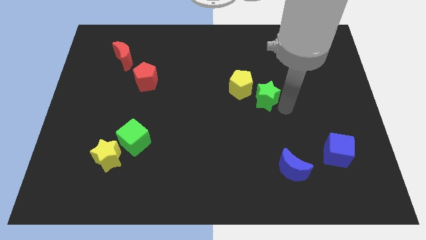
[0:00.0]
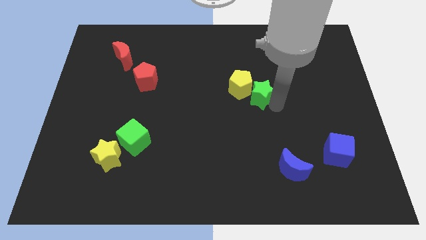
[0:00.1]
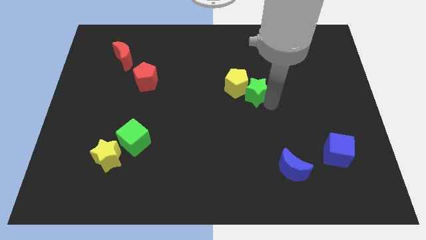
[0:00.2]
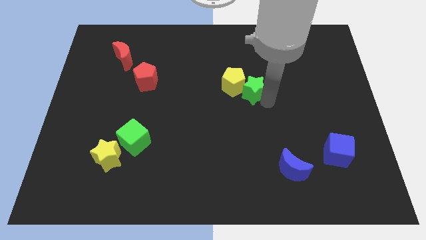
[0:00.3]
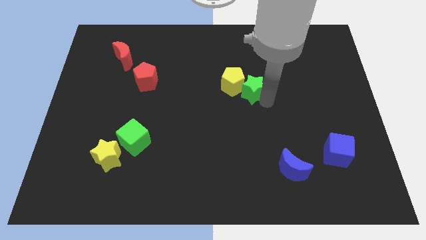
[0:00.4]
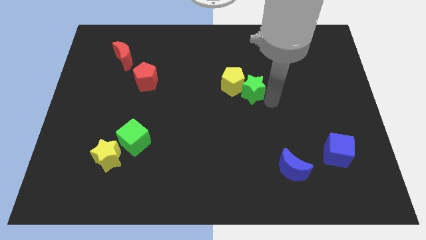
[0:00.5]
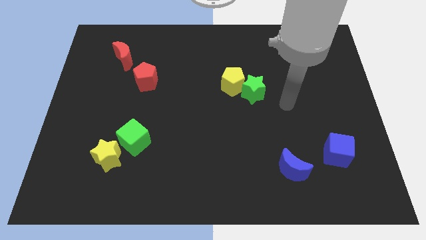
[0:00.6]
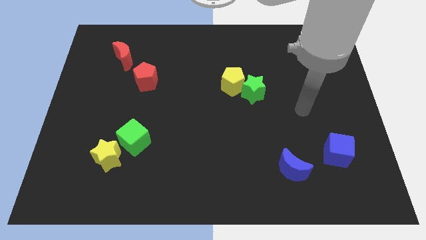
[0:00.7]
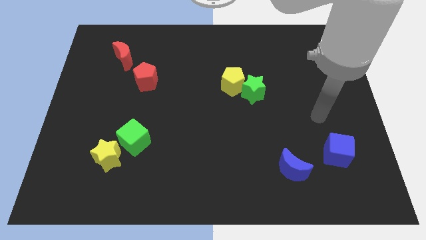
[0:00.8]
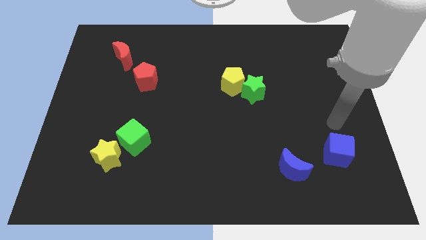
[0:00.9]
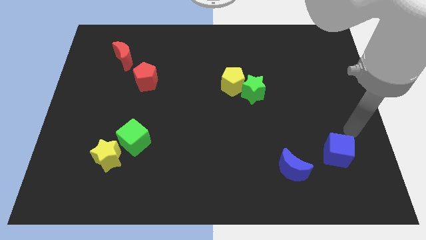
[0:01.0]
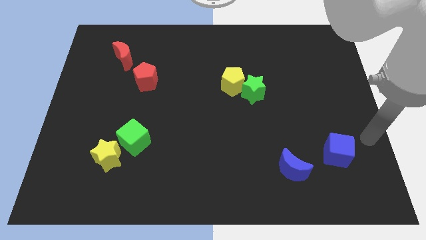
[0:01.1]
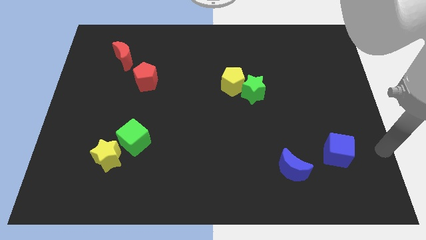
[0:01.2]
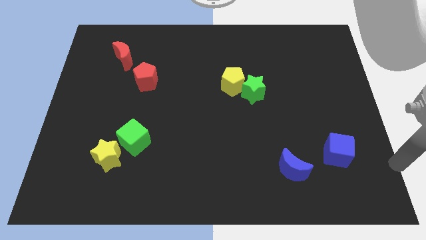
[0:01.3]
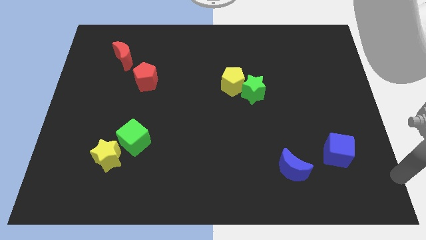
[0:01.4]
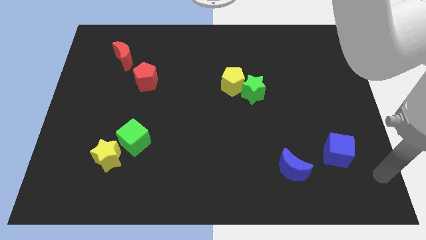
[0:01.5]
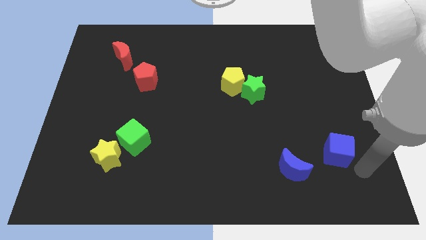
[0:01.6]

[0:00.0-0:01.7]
place your arm to the bottom right of blue cube

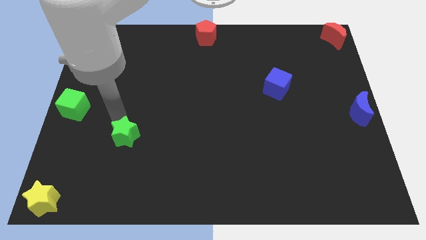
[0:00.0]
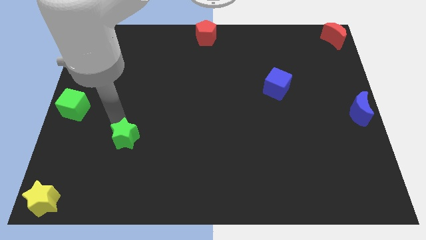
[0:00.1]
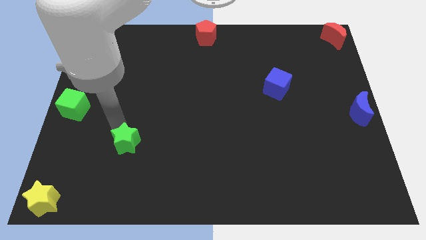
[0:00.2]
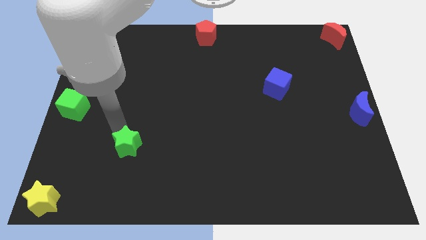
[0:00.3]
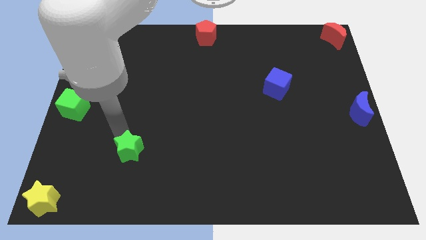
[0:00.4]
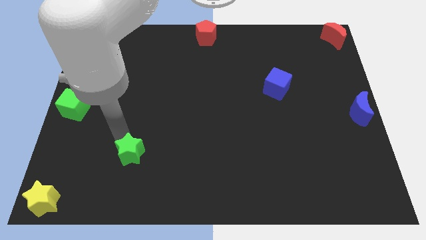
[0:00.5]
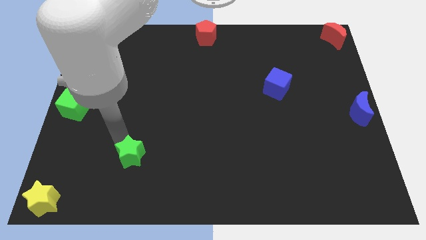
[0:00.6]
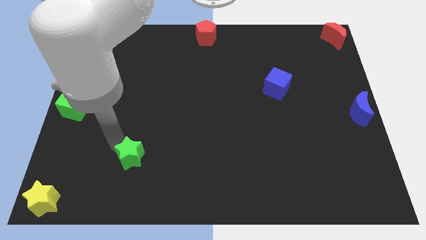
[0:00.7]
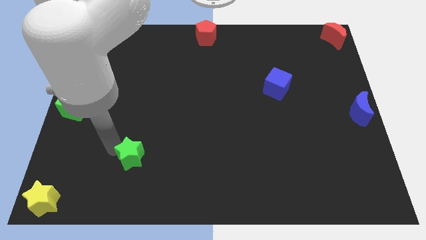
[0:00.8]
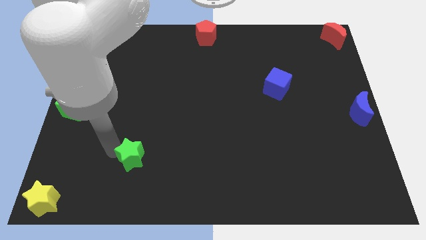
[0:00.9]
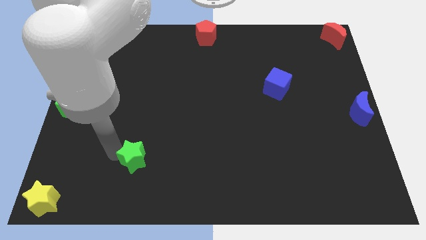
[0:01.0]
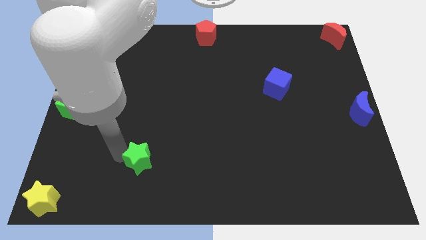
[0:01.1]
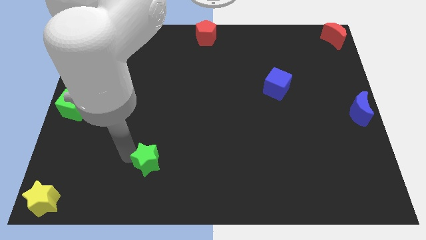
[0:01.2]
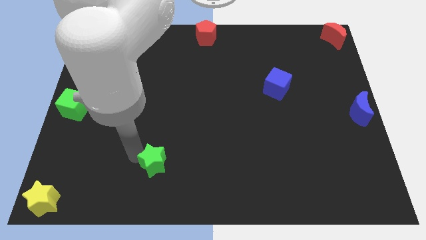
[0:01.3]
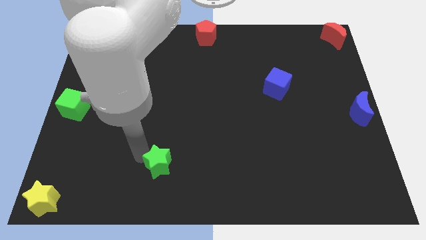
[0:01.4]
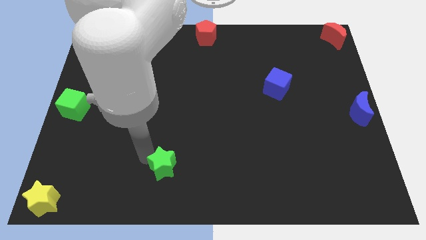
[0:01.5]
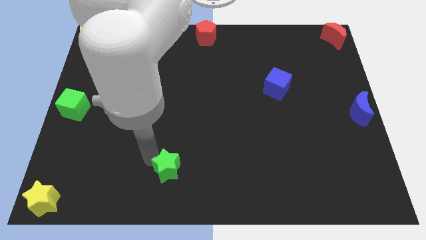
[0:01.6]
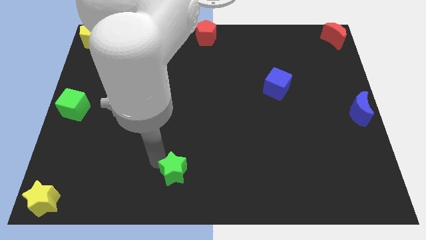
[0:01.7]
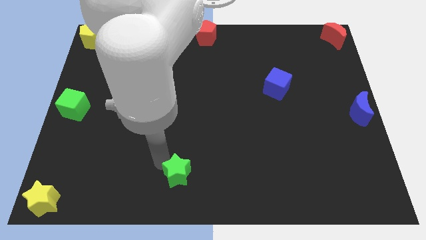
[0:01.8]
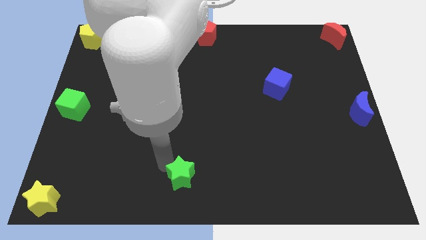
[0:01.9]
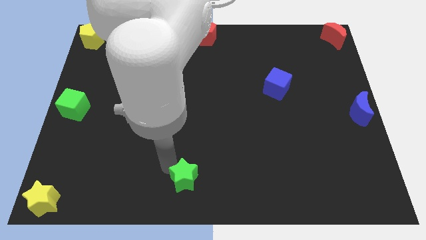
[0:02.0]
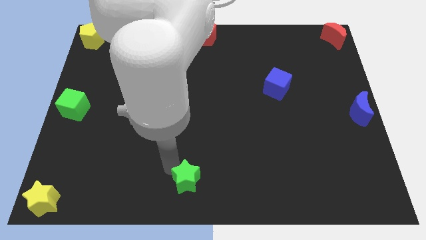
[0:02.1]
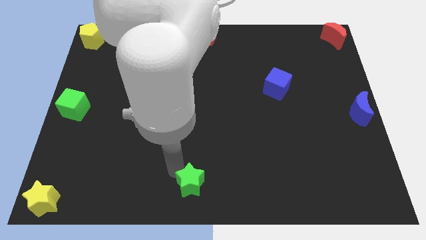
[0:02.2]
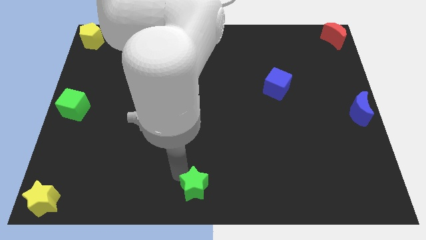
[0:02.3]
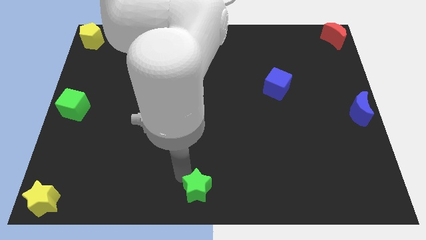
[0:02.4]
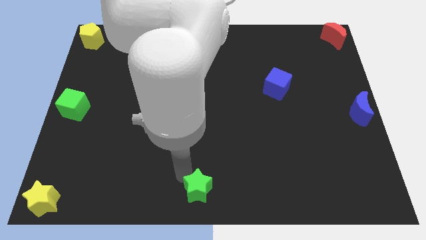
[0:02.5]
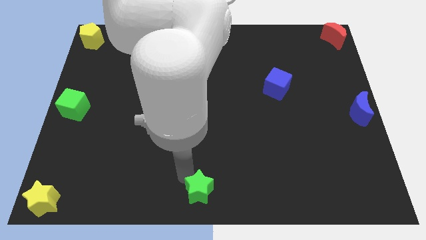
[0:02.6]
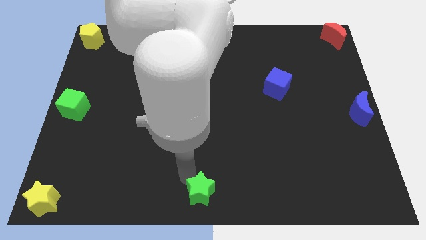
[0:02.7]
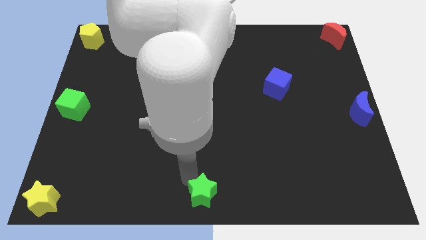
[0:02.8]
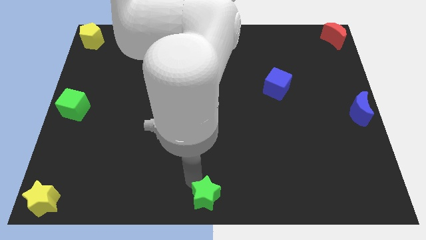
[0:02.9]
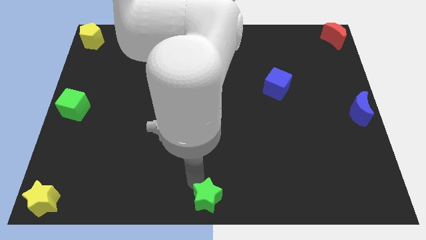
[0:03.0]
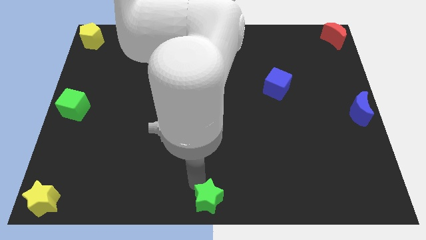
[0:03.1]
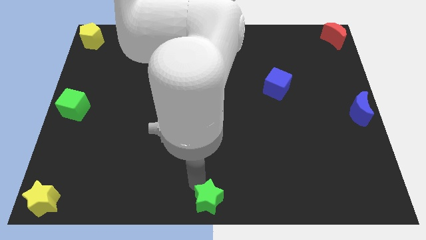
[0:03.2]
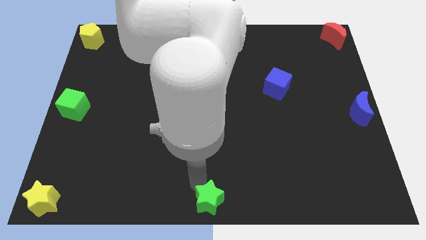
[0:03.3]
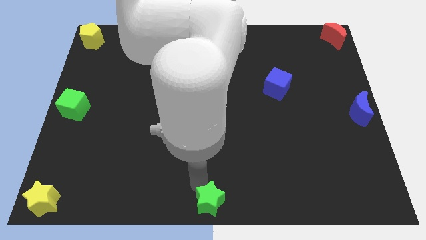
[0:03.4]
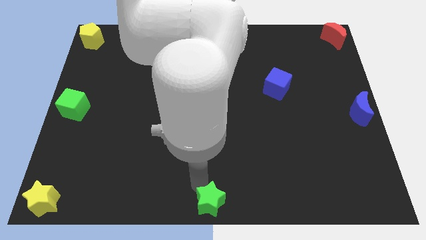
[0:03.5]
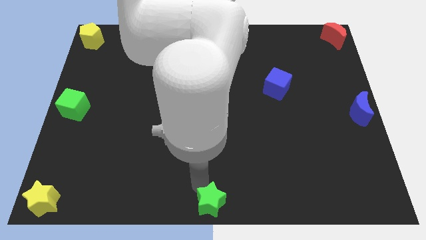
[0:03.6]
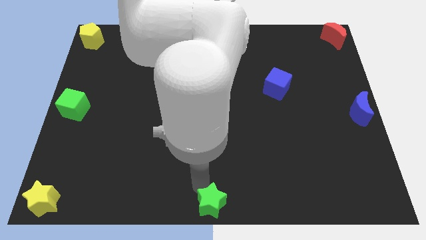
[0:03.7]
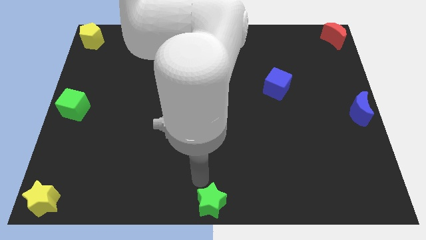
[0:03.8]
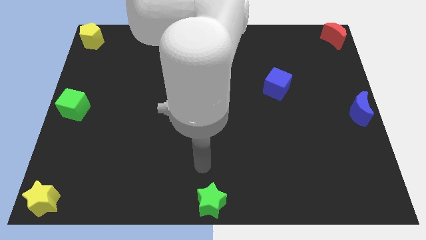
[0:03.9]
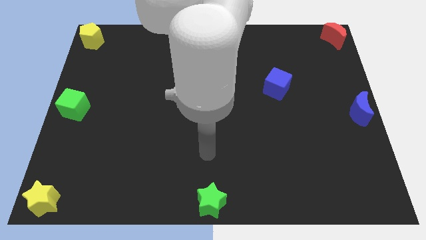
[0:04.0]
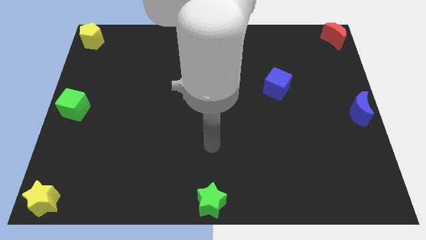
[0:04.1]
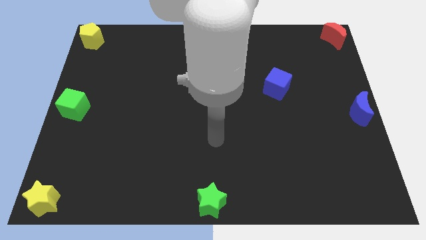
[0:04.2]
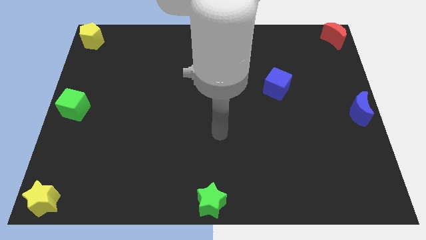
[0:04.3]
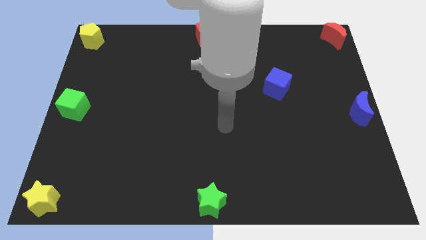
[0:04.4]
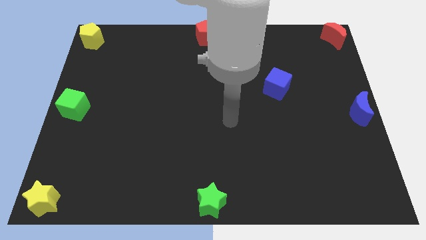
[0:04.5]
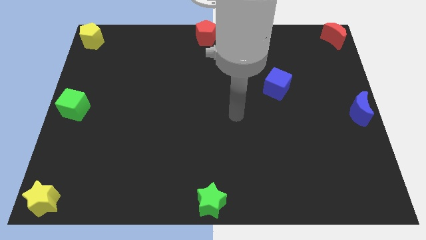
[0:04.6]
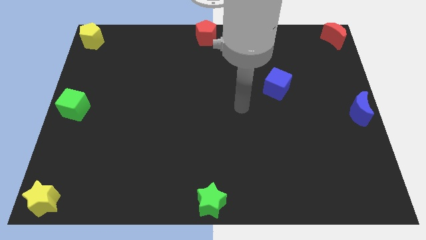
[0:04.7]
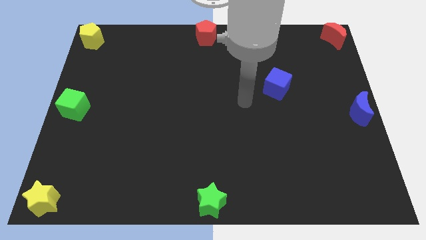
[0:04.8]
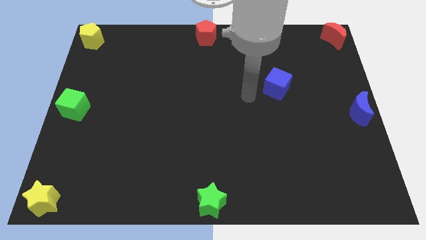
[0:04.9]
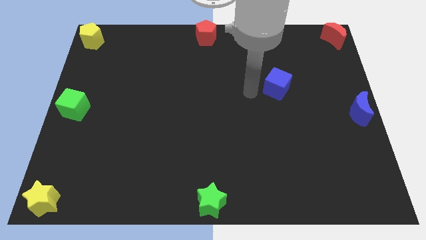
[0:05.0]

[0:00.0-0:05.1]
place the green star to the bottom center

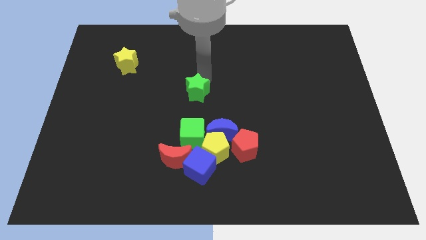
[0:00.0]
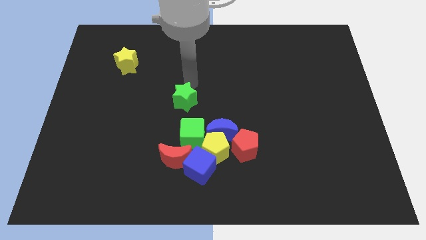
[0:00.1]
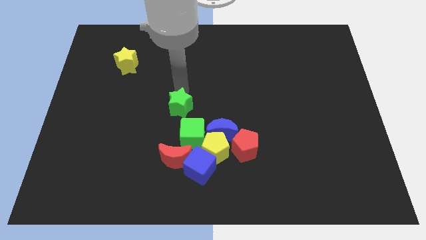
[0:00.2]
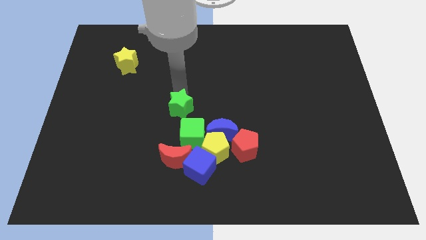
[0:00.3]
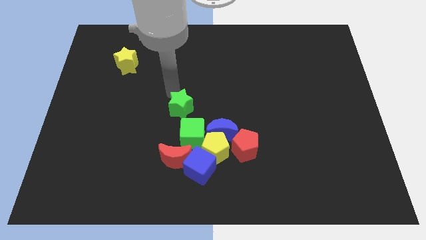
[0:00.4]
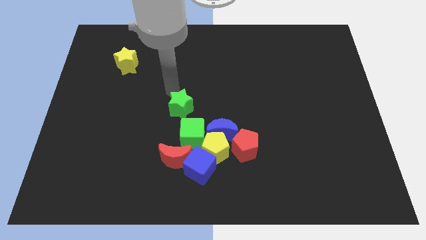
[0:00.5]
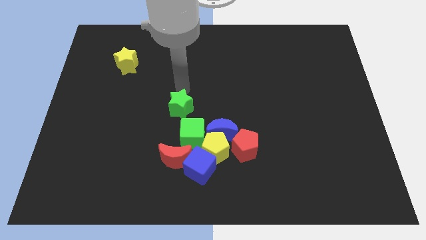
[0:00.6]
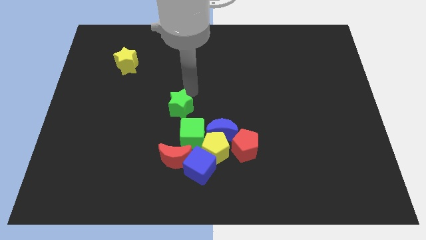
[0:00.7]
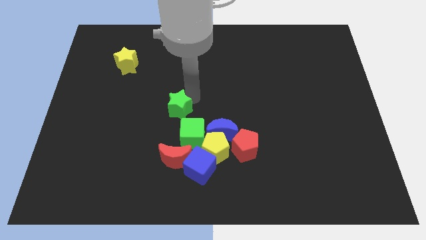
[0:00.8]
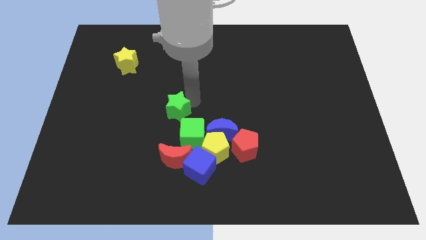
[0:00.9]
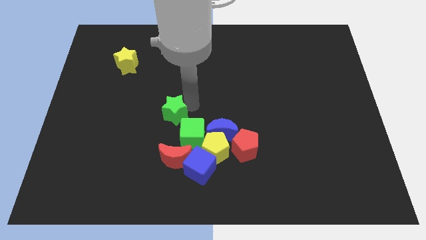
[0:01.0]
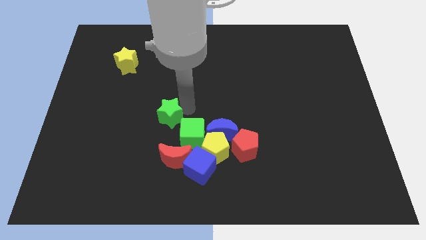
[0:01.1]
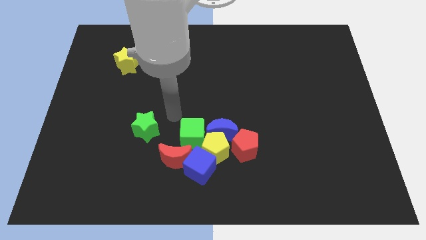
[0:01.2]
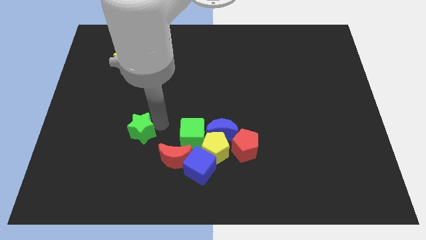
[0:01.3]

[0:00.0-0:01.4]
push the green star parallel to the green cube

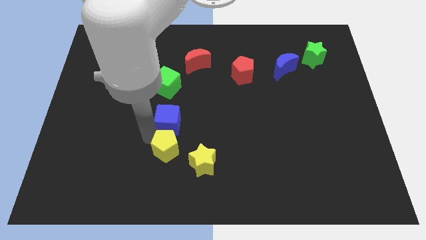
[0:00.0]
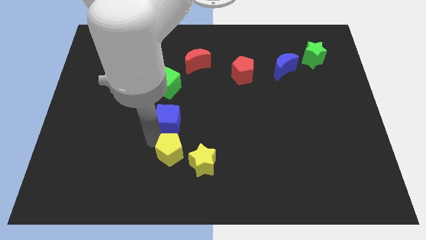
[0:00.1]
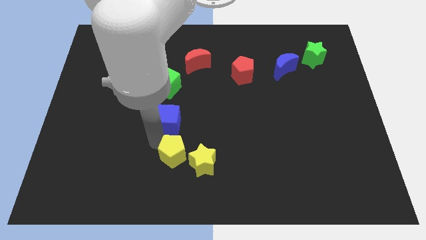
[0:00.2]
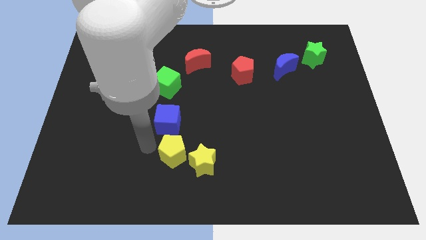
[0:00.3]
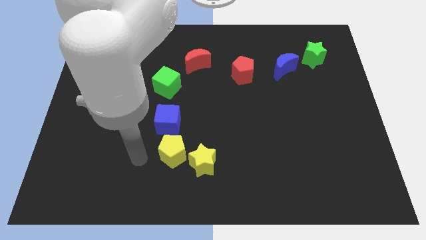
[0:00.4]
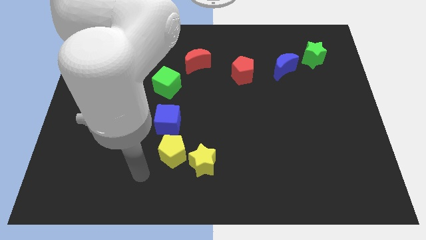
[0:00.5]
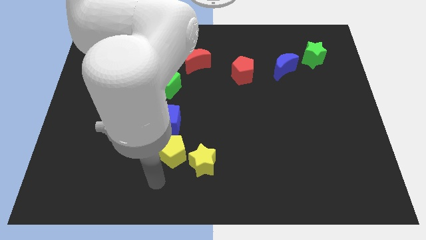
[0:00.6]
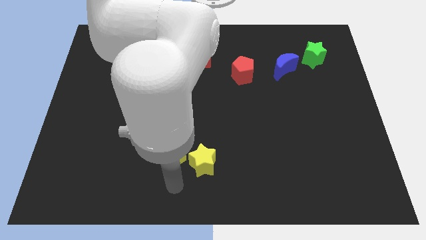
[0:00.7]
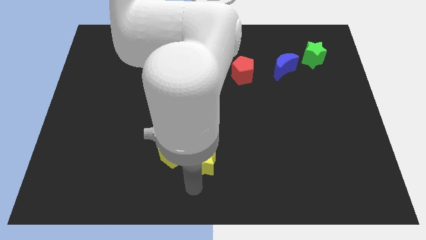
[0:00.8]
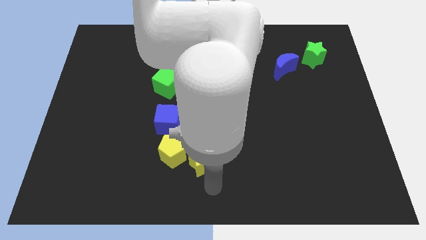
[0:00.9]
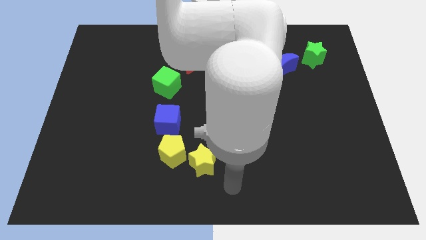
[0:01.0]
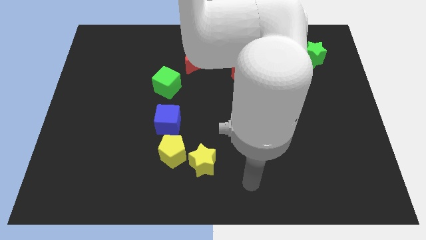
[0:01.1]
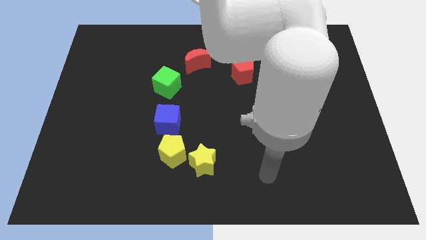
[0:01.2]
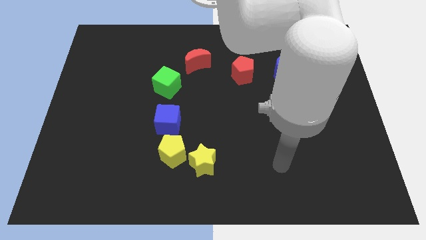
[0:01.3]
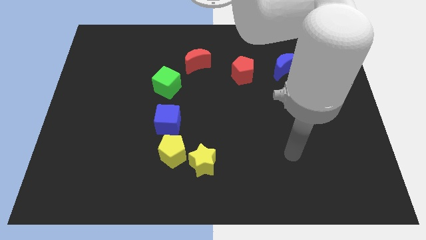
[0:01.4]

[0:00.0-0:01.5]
push yellow pentagon into the yellow star
